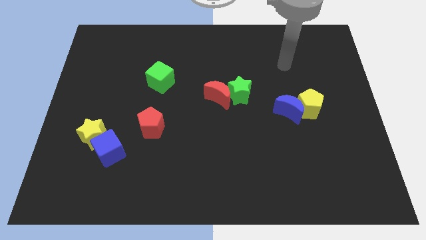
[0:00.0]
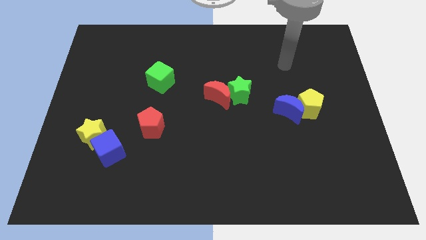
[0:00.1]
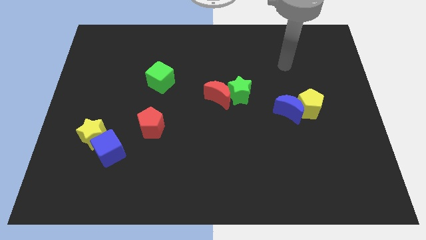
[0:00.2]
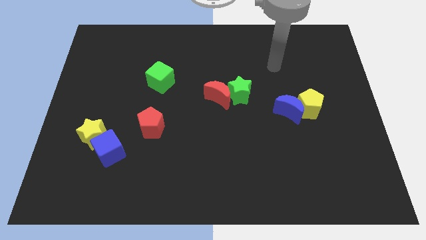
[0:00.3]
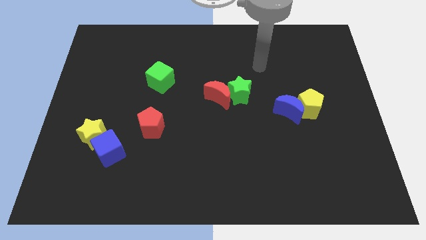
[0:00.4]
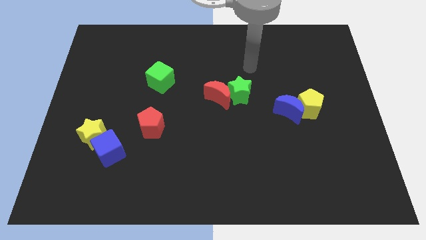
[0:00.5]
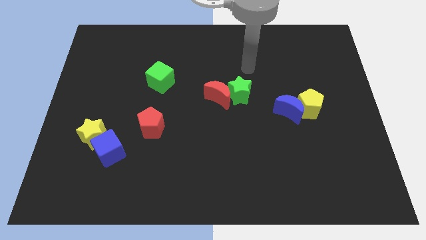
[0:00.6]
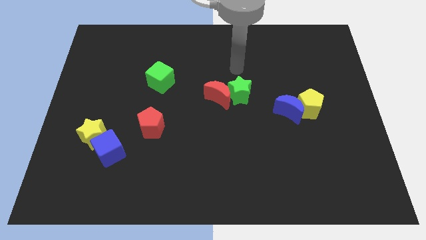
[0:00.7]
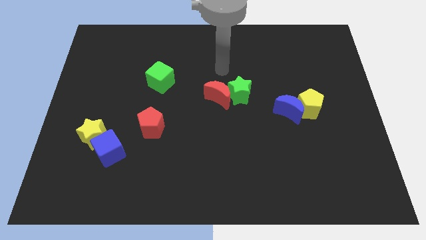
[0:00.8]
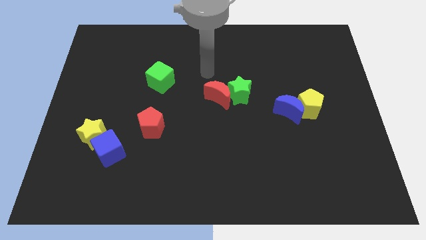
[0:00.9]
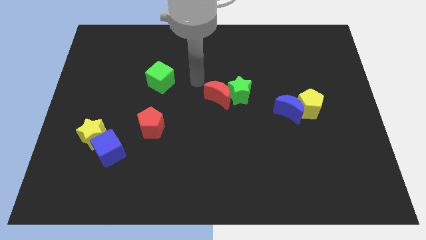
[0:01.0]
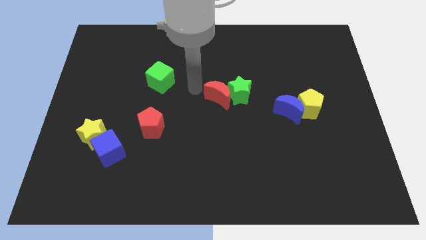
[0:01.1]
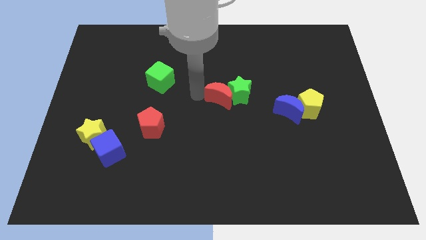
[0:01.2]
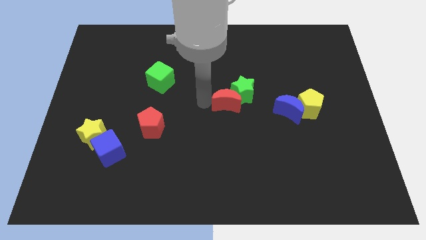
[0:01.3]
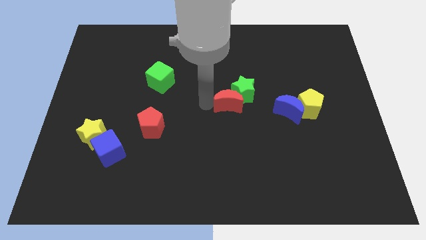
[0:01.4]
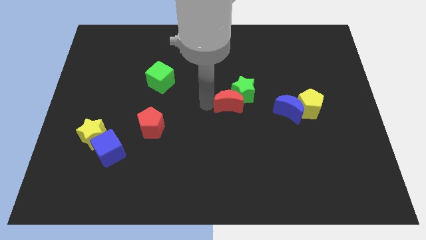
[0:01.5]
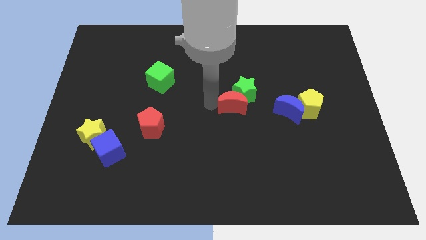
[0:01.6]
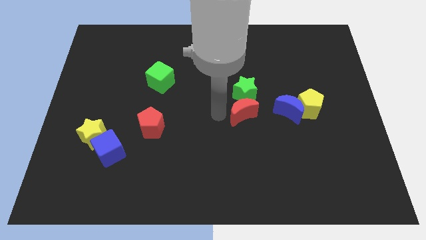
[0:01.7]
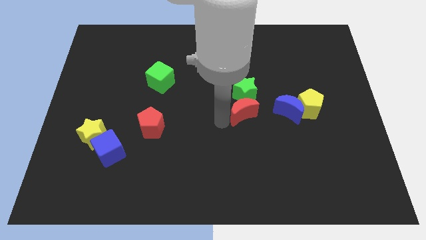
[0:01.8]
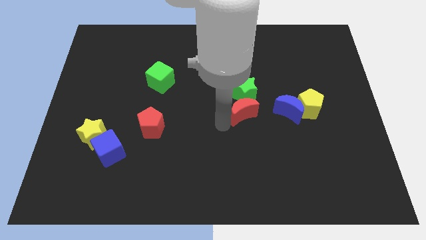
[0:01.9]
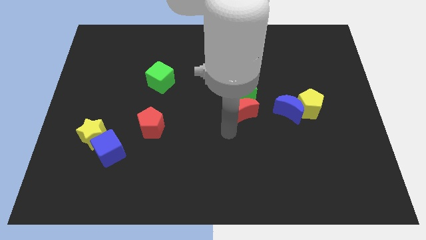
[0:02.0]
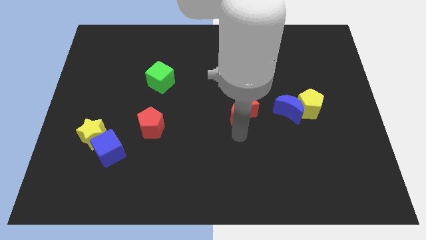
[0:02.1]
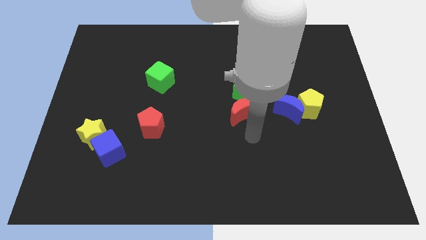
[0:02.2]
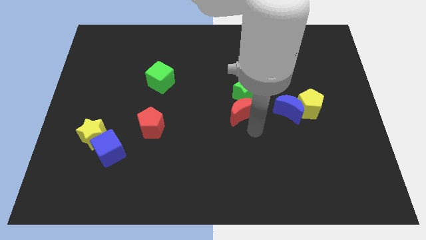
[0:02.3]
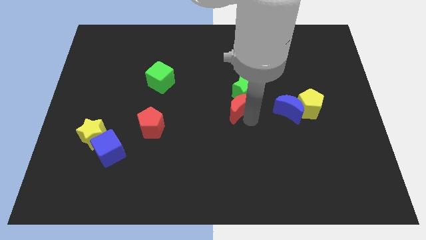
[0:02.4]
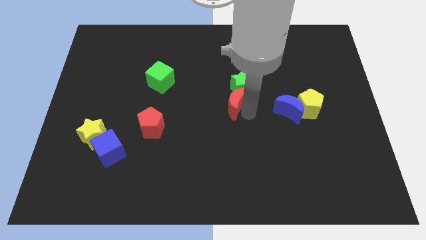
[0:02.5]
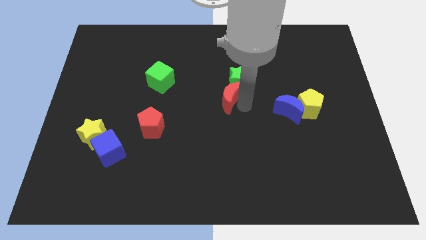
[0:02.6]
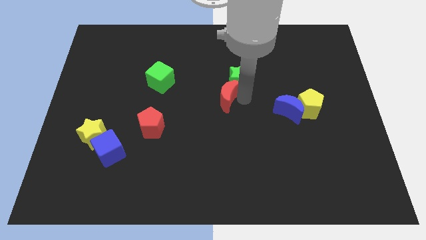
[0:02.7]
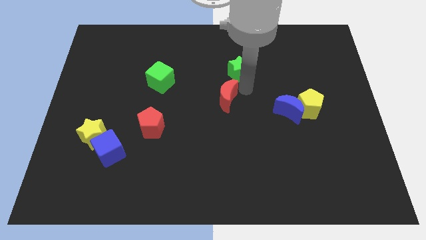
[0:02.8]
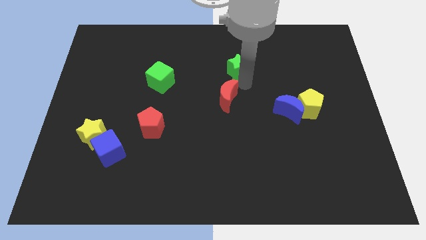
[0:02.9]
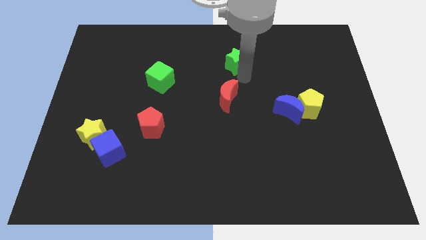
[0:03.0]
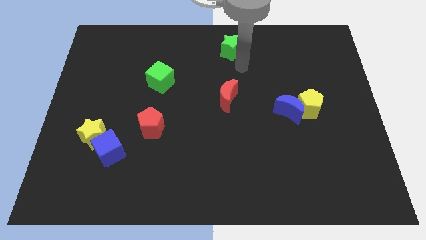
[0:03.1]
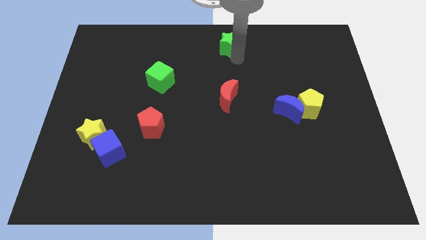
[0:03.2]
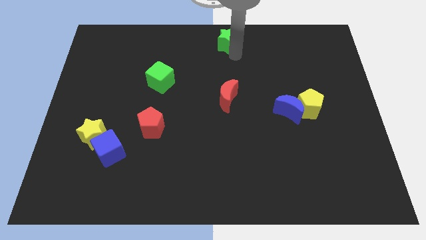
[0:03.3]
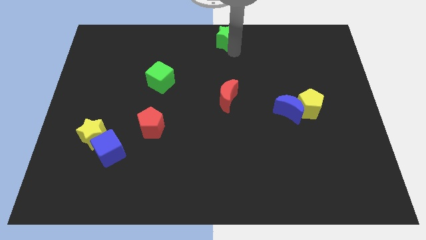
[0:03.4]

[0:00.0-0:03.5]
place green star to the top center of the board

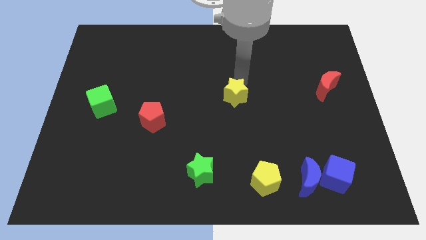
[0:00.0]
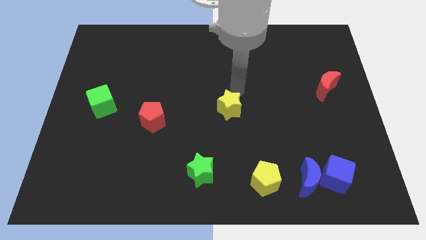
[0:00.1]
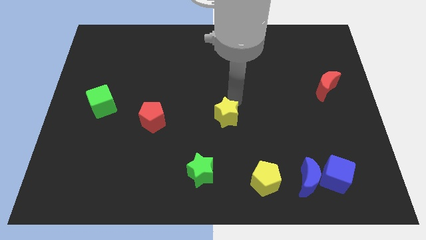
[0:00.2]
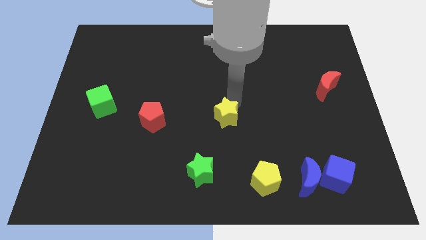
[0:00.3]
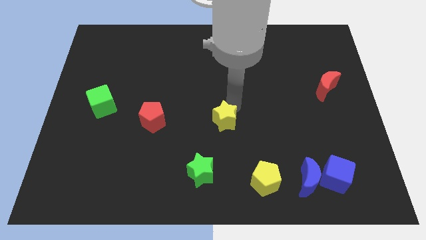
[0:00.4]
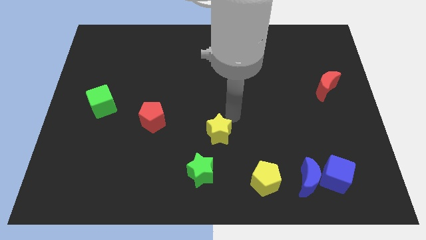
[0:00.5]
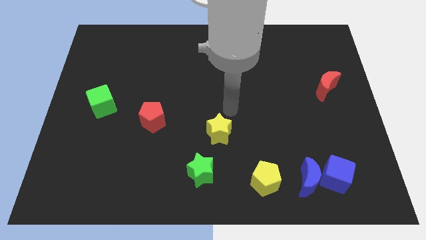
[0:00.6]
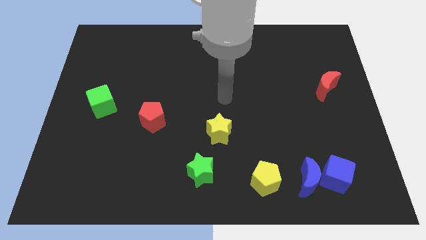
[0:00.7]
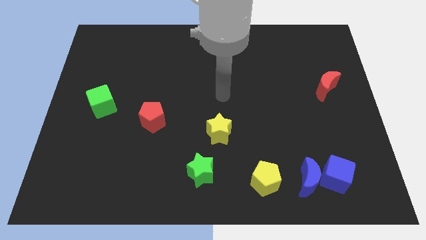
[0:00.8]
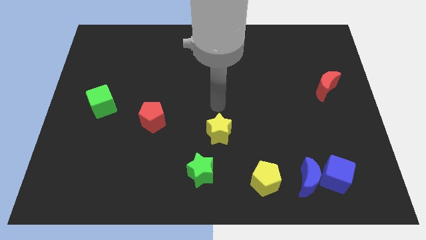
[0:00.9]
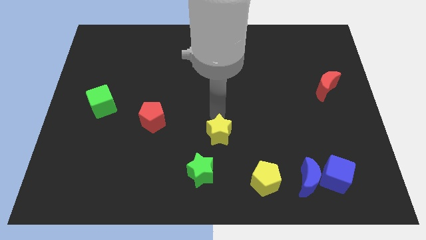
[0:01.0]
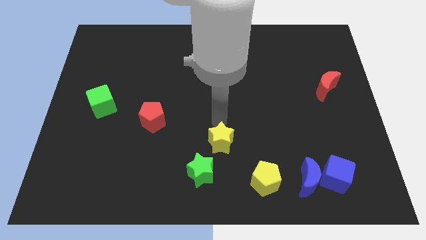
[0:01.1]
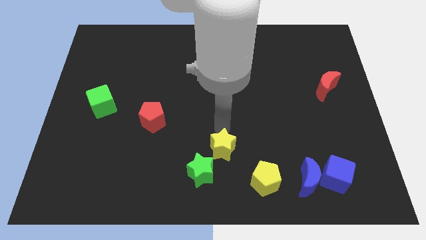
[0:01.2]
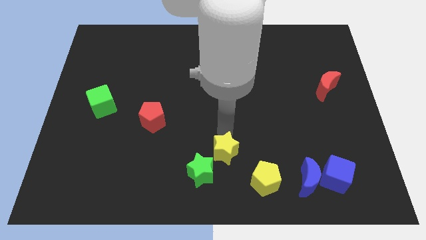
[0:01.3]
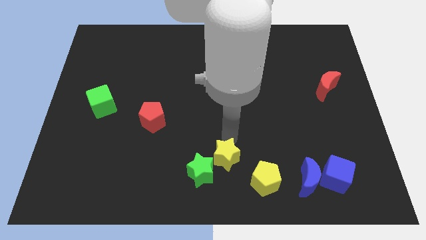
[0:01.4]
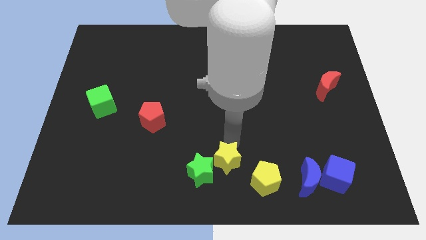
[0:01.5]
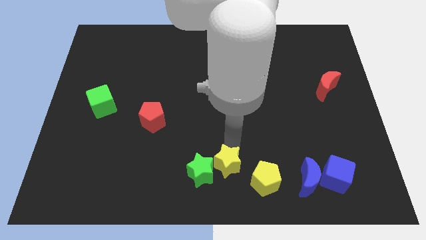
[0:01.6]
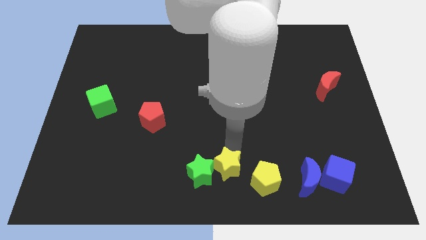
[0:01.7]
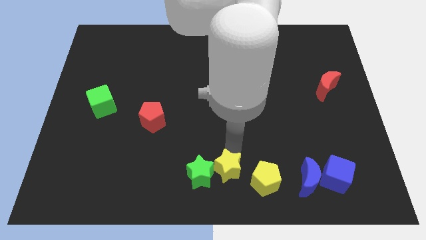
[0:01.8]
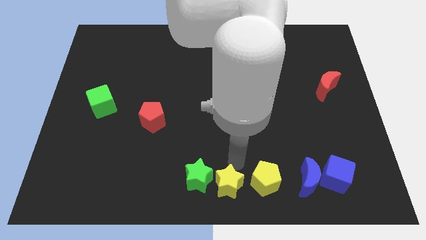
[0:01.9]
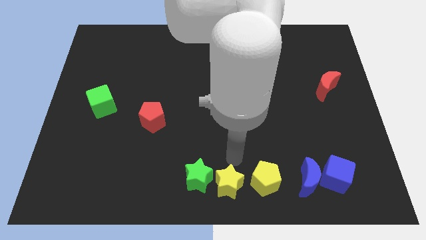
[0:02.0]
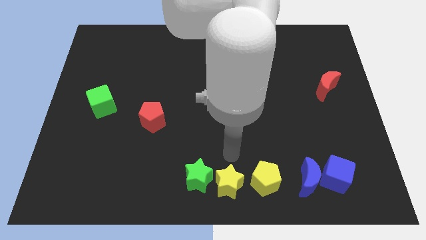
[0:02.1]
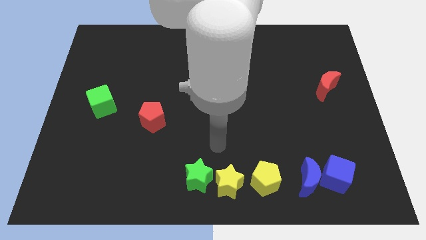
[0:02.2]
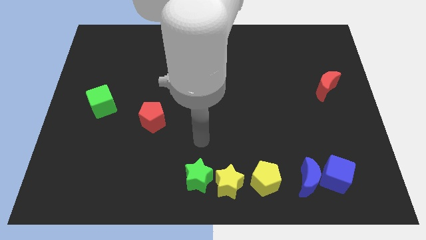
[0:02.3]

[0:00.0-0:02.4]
place the yellow star close to green star

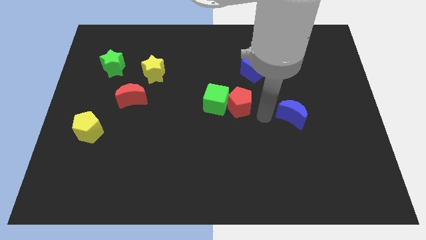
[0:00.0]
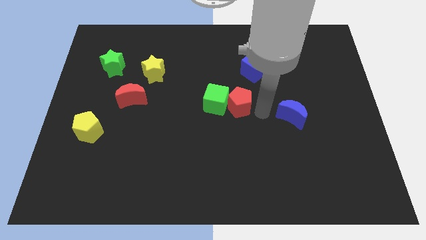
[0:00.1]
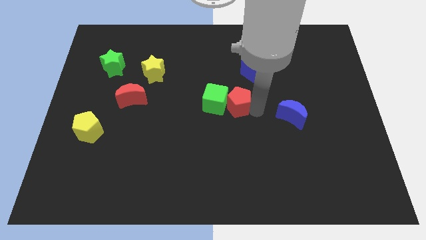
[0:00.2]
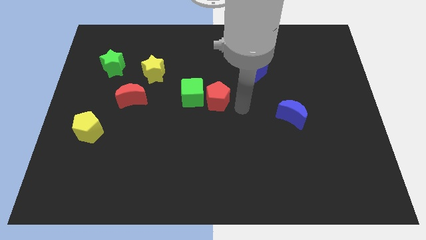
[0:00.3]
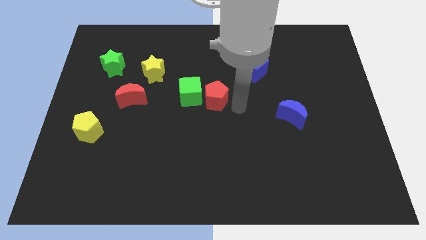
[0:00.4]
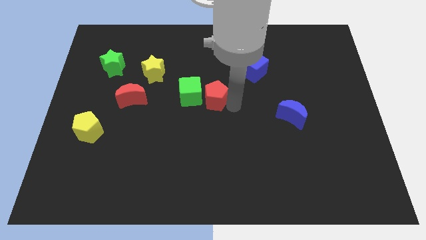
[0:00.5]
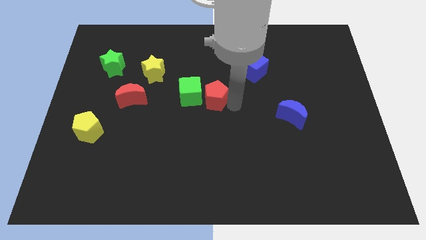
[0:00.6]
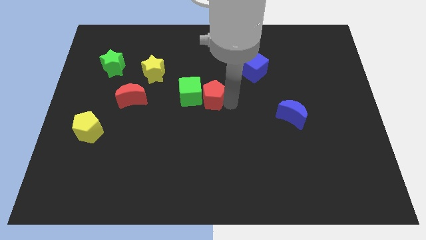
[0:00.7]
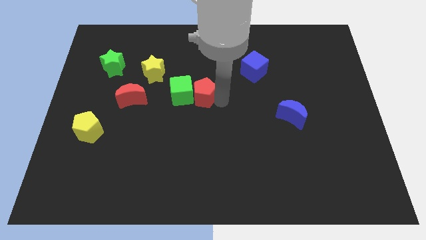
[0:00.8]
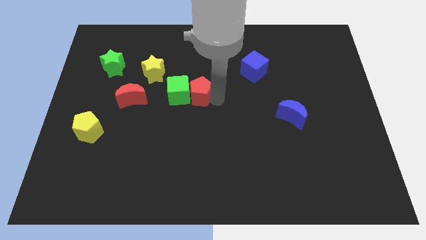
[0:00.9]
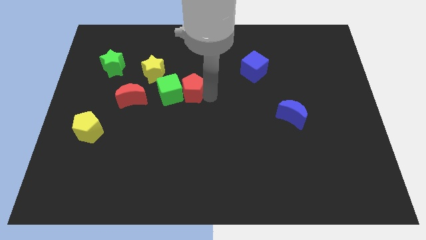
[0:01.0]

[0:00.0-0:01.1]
push red pentagon along with green cube towards yellow star

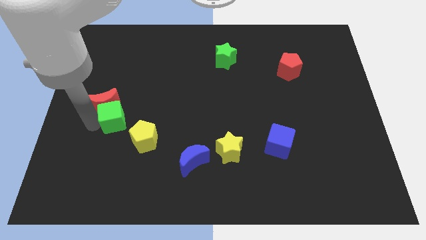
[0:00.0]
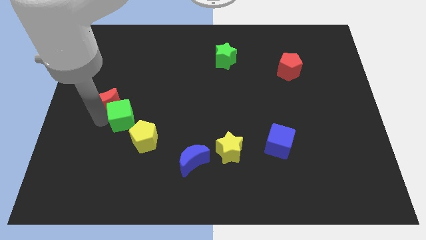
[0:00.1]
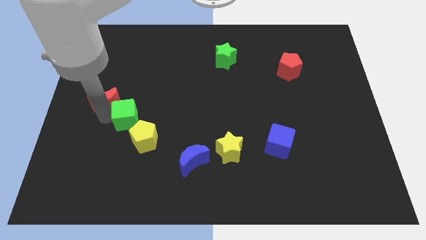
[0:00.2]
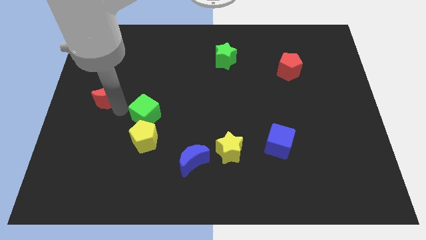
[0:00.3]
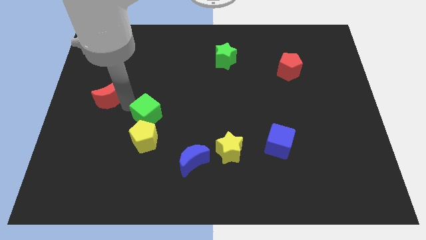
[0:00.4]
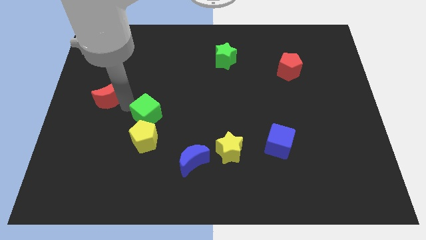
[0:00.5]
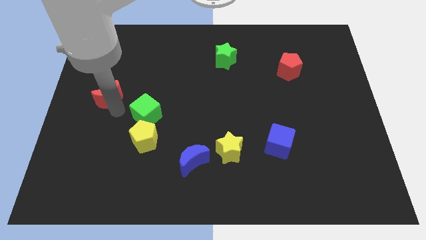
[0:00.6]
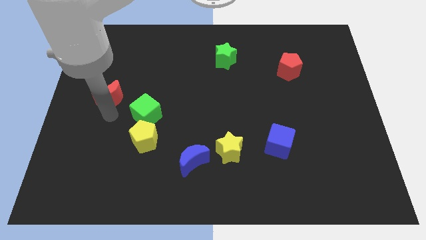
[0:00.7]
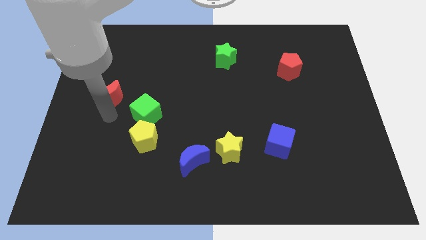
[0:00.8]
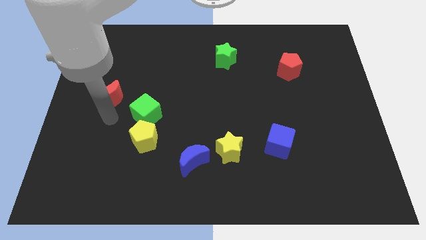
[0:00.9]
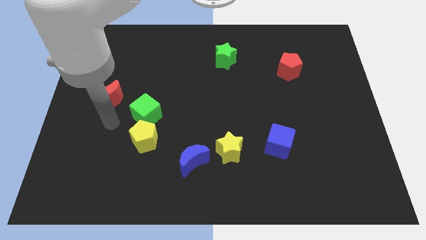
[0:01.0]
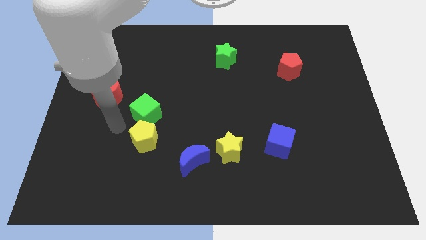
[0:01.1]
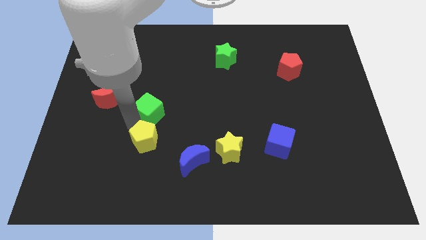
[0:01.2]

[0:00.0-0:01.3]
push the green cube to the top of the yellow pentagon

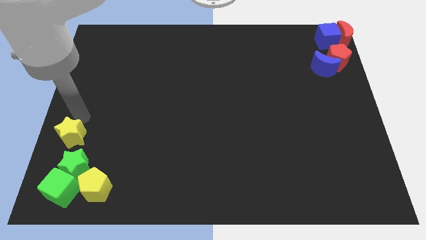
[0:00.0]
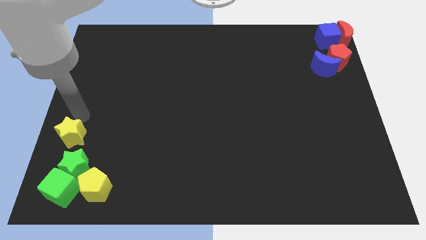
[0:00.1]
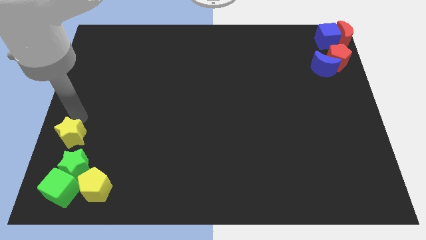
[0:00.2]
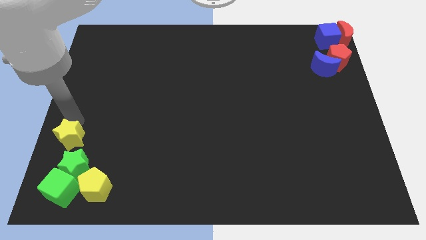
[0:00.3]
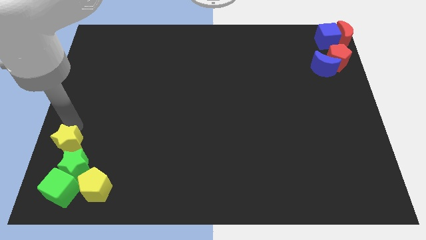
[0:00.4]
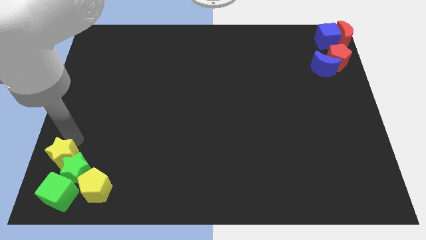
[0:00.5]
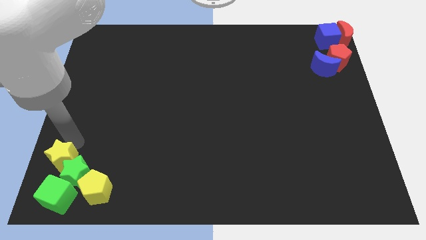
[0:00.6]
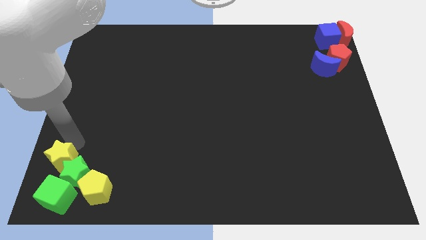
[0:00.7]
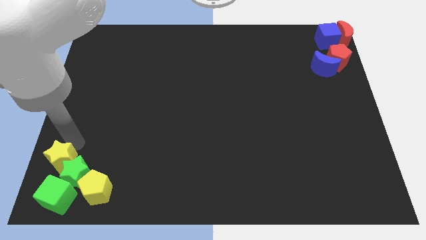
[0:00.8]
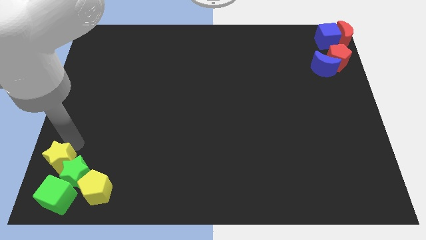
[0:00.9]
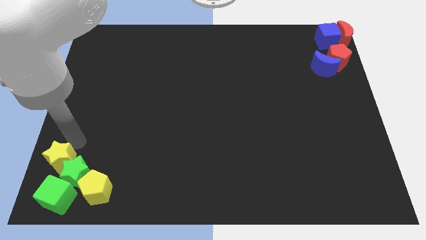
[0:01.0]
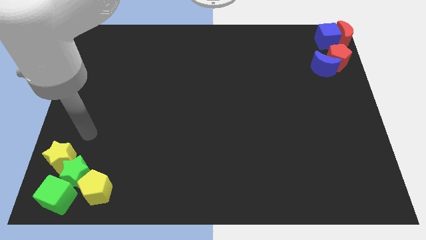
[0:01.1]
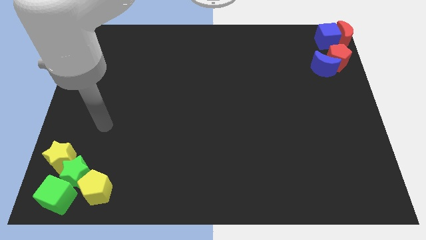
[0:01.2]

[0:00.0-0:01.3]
push the yellow star the top left of the green star
